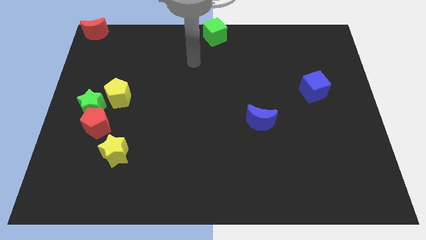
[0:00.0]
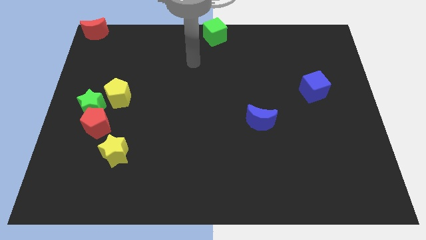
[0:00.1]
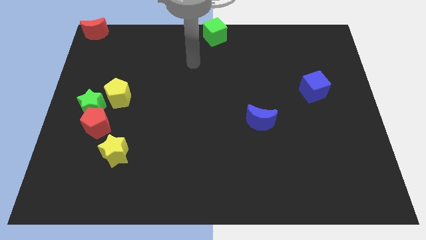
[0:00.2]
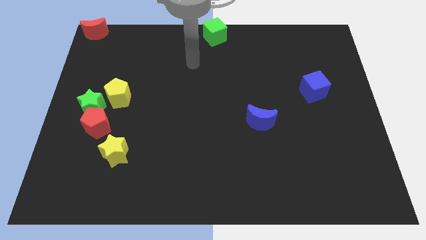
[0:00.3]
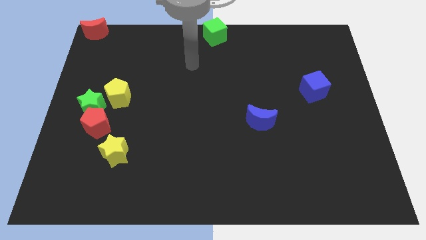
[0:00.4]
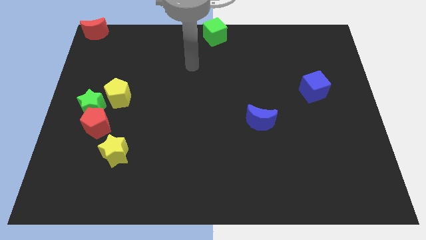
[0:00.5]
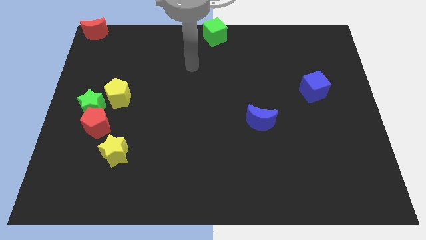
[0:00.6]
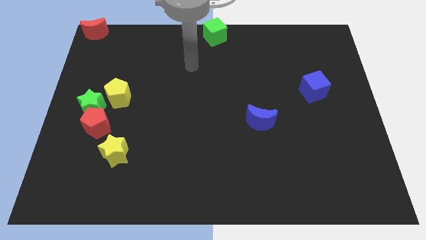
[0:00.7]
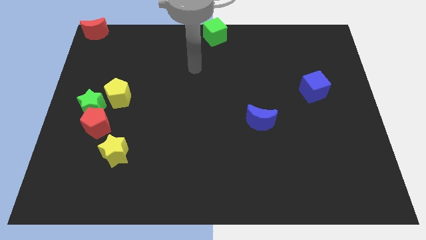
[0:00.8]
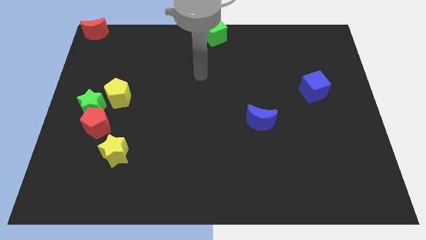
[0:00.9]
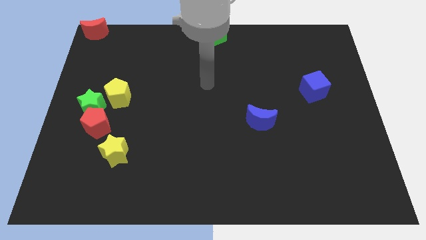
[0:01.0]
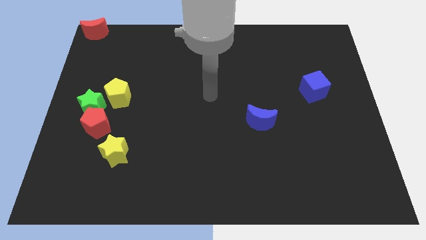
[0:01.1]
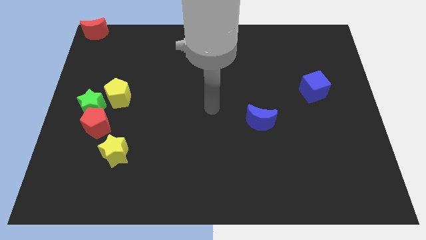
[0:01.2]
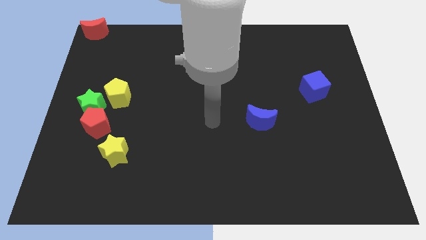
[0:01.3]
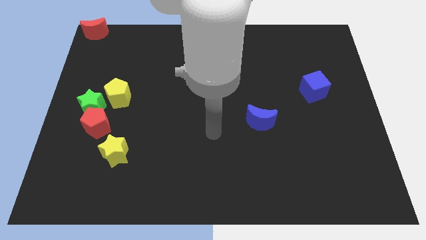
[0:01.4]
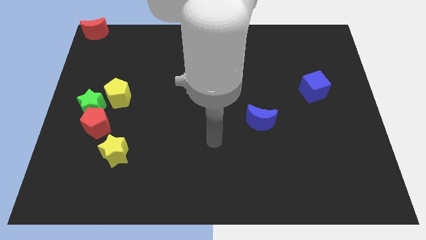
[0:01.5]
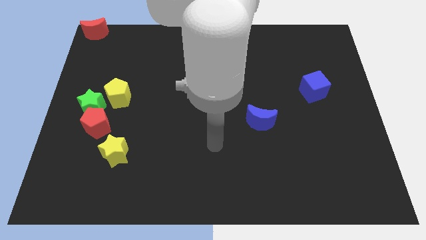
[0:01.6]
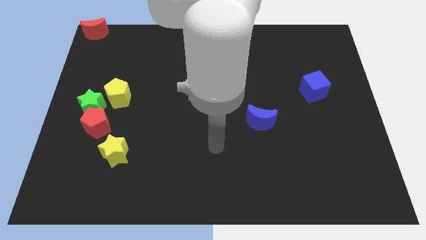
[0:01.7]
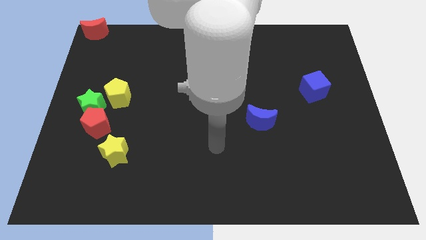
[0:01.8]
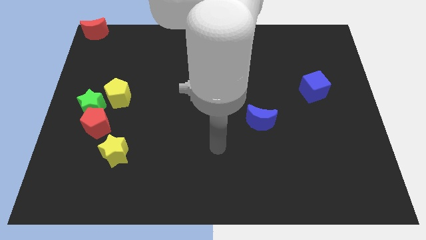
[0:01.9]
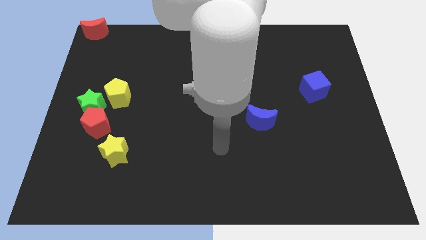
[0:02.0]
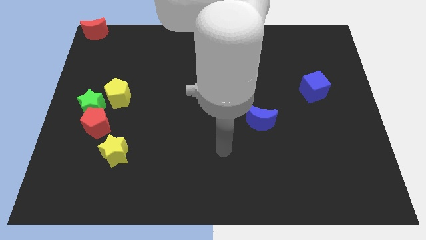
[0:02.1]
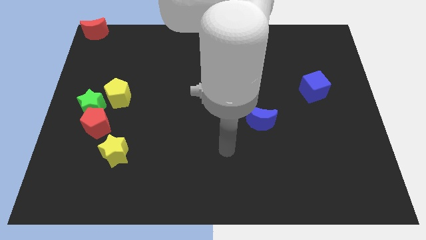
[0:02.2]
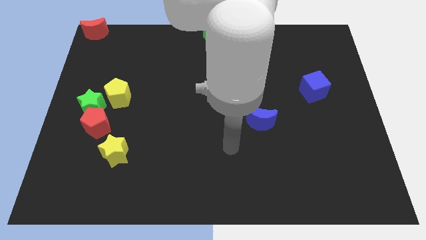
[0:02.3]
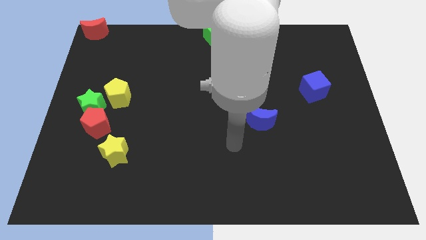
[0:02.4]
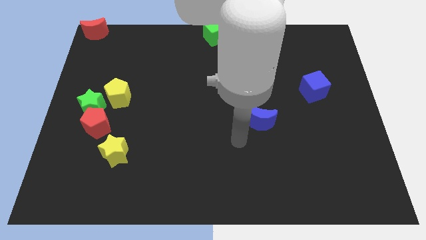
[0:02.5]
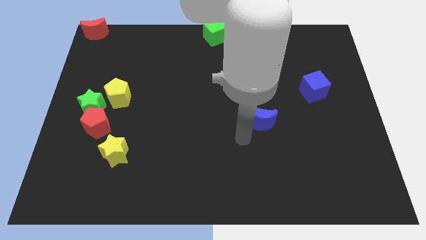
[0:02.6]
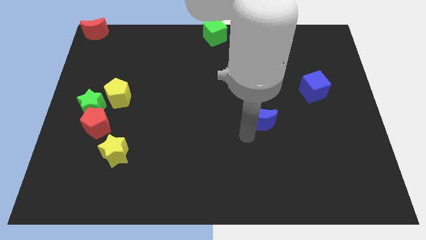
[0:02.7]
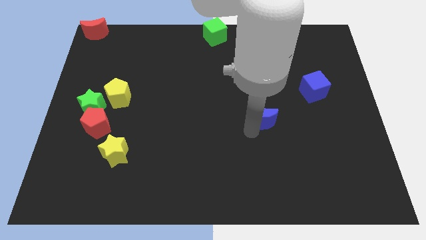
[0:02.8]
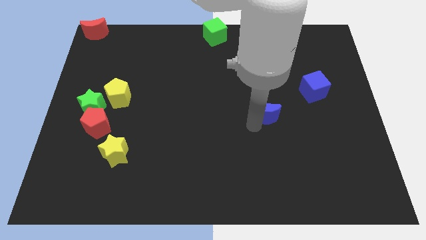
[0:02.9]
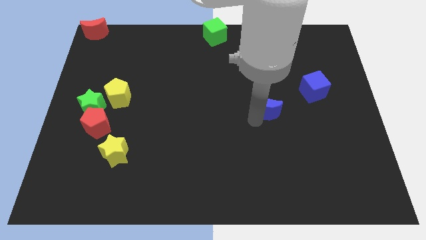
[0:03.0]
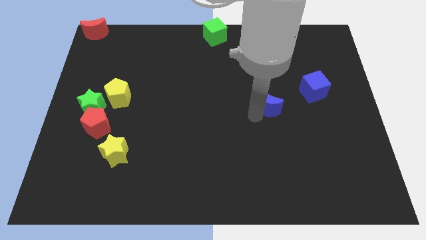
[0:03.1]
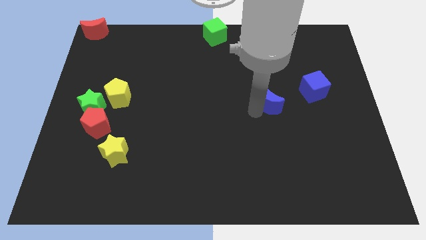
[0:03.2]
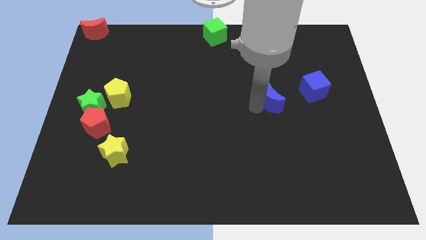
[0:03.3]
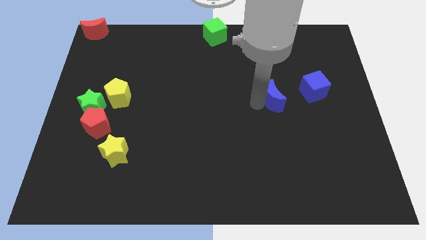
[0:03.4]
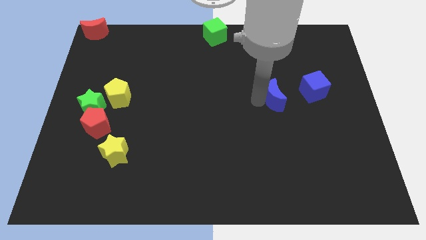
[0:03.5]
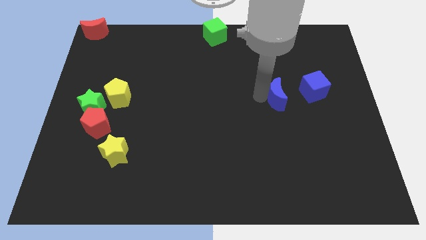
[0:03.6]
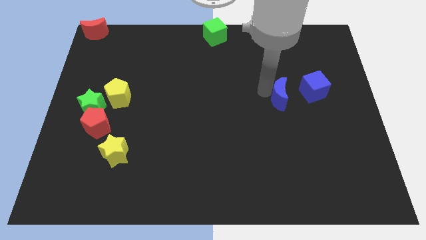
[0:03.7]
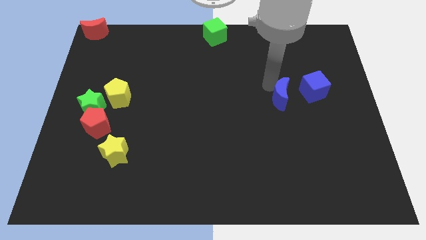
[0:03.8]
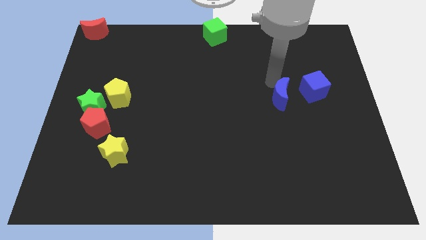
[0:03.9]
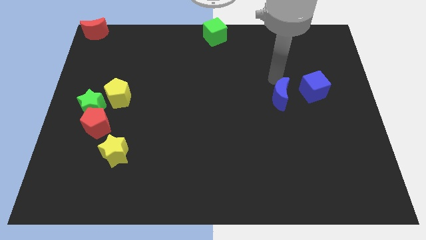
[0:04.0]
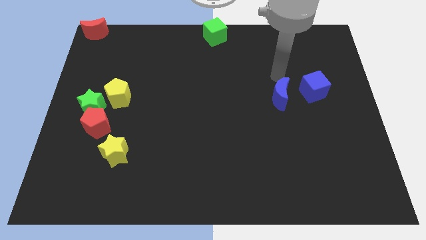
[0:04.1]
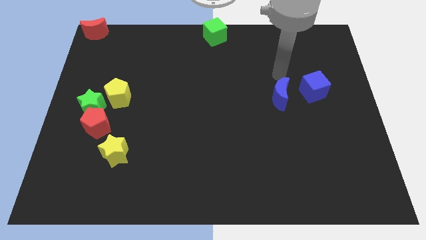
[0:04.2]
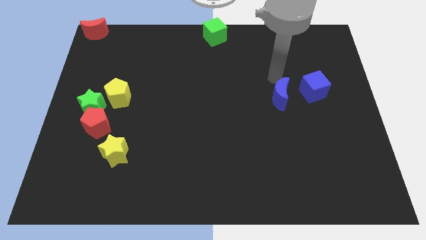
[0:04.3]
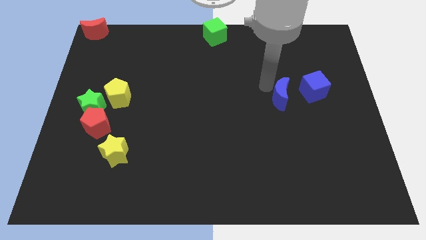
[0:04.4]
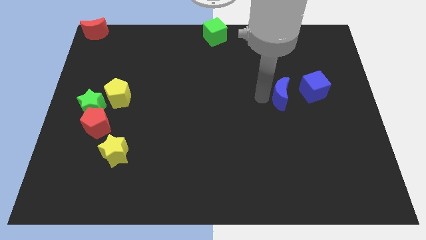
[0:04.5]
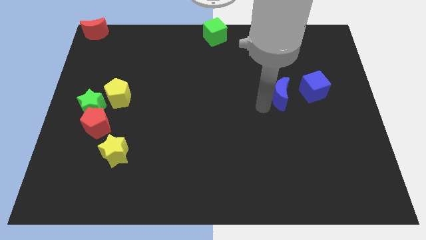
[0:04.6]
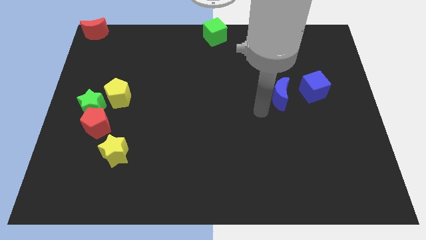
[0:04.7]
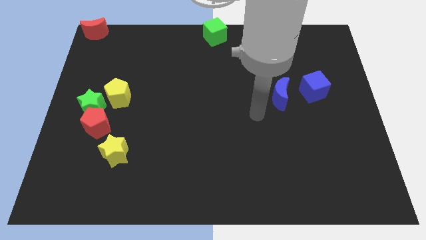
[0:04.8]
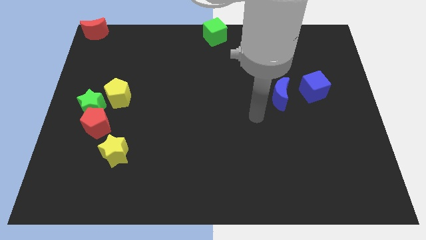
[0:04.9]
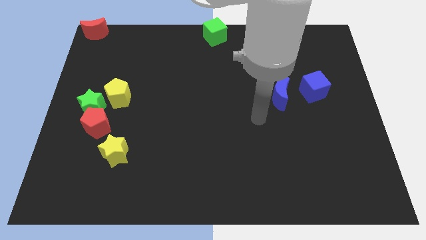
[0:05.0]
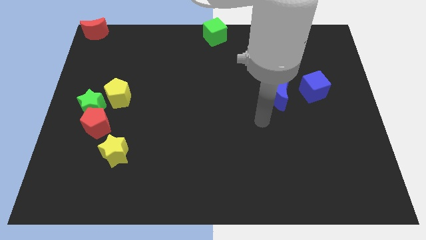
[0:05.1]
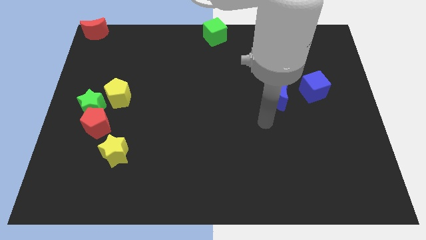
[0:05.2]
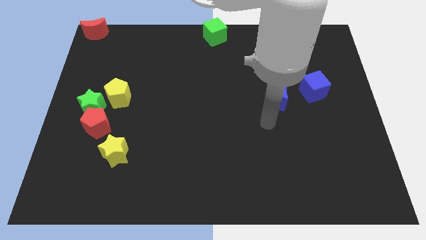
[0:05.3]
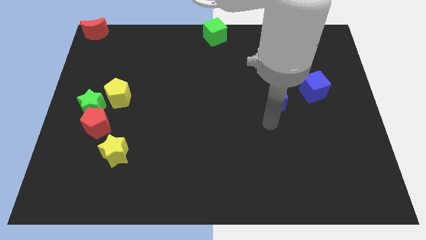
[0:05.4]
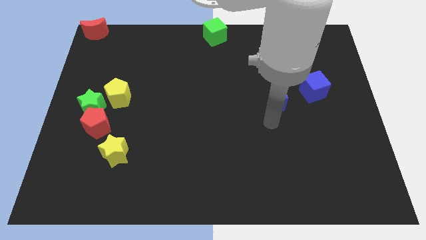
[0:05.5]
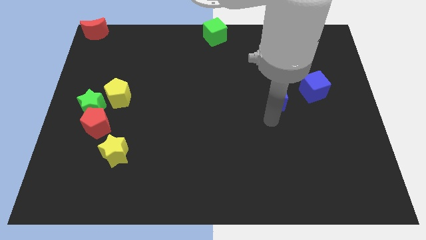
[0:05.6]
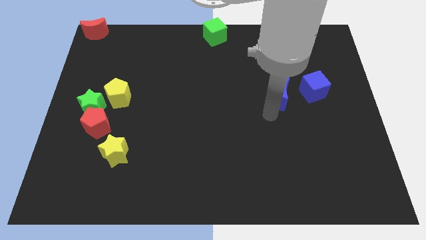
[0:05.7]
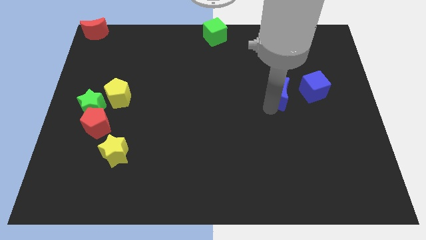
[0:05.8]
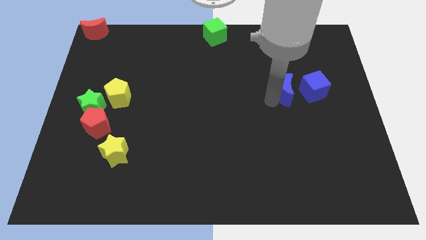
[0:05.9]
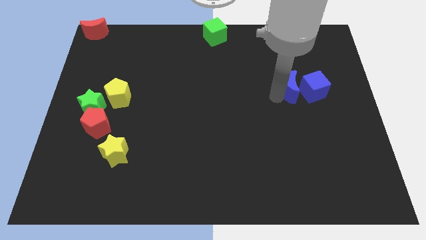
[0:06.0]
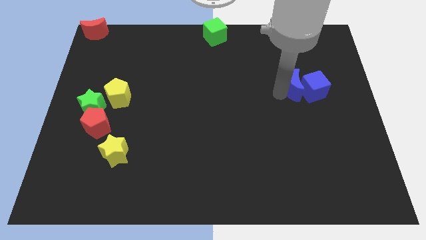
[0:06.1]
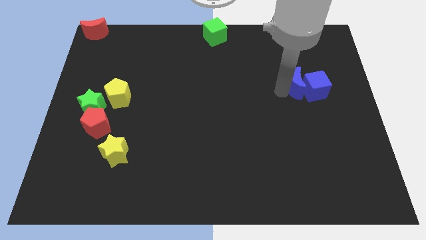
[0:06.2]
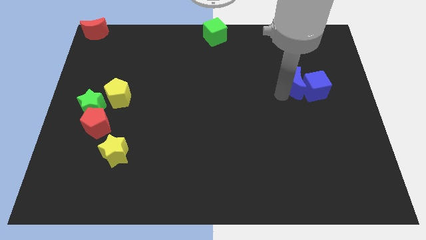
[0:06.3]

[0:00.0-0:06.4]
push the blue crescent into the blue cube

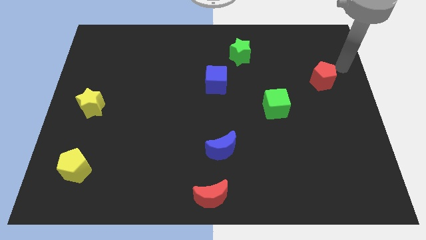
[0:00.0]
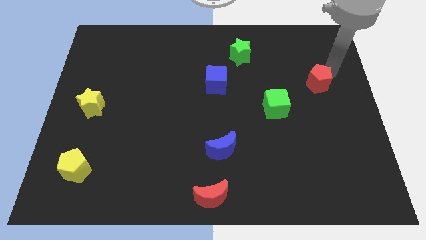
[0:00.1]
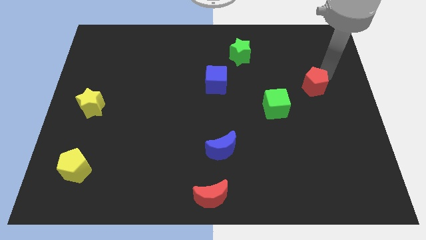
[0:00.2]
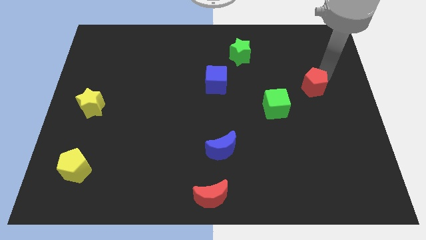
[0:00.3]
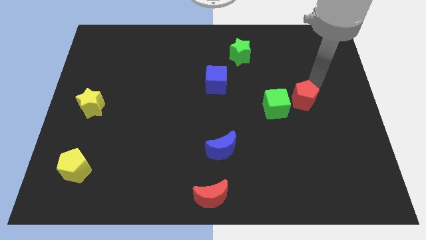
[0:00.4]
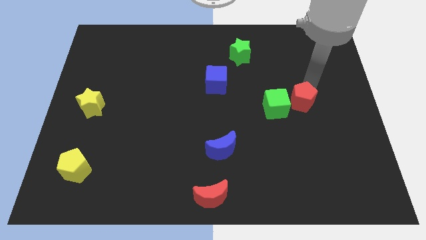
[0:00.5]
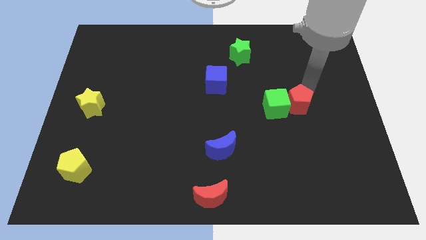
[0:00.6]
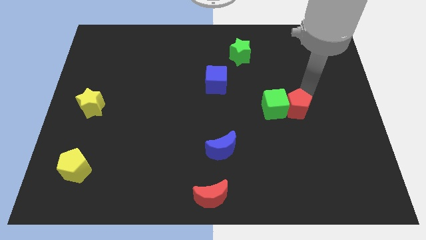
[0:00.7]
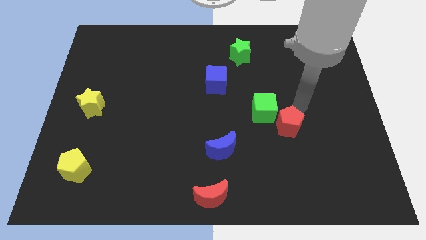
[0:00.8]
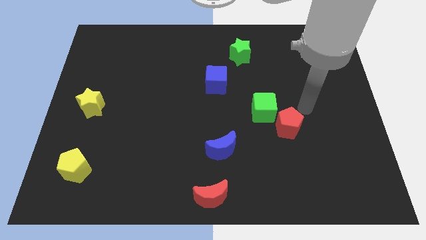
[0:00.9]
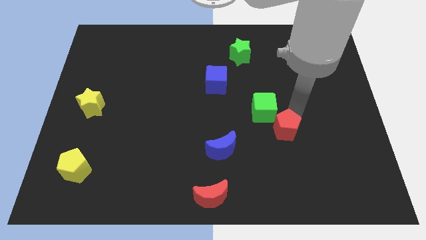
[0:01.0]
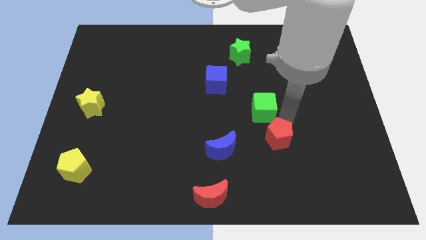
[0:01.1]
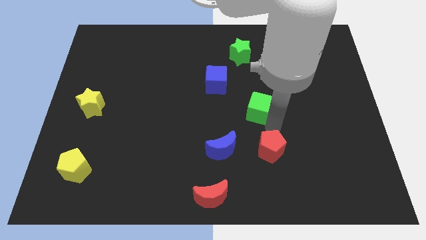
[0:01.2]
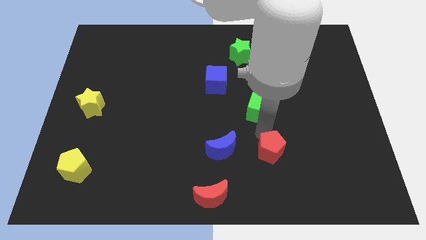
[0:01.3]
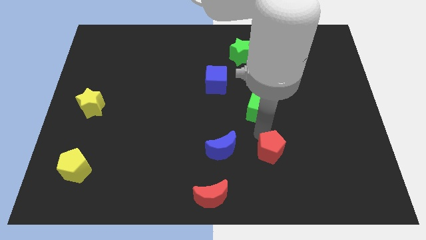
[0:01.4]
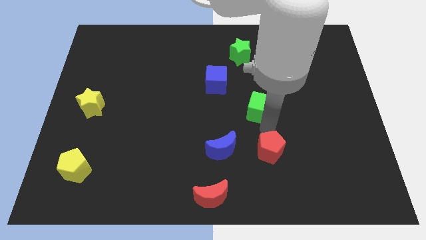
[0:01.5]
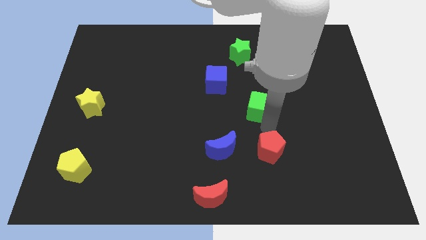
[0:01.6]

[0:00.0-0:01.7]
move the red pentagon towards the right of the blue crescent

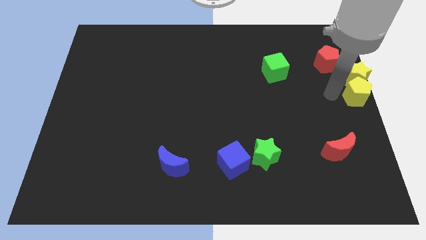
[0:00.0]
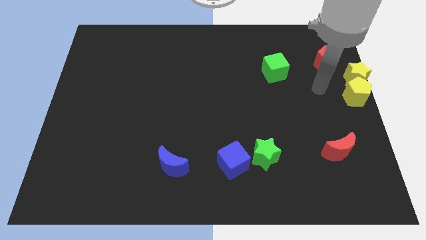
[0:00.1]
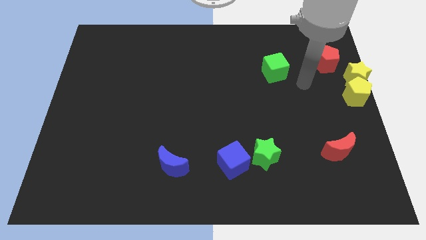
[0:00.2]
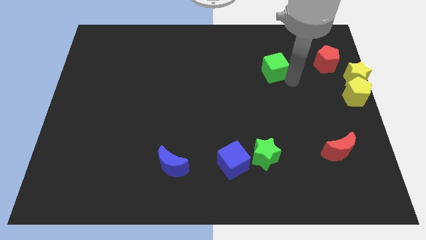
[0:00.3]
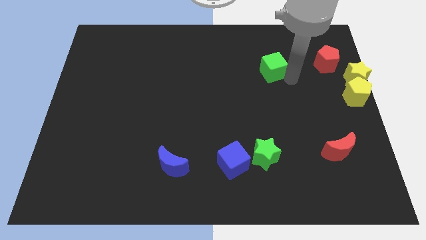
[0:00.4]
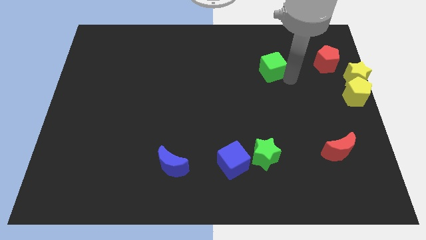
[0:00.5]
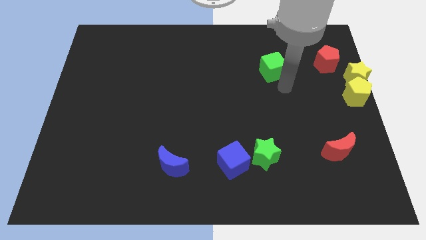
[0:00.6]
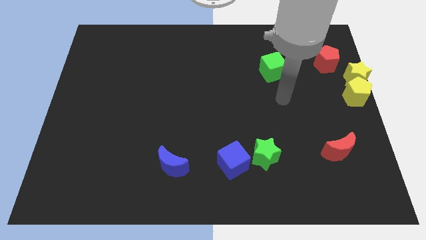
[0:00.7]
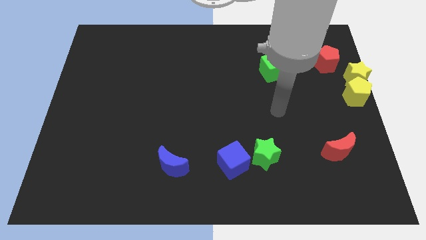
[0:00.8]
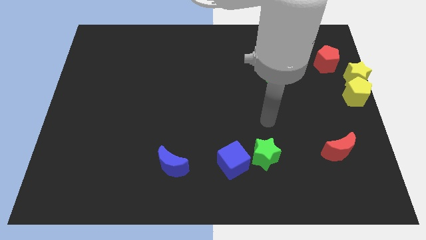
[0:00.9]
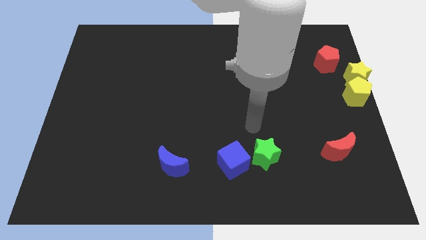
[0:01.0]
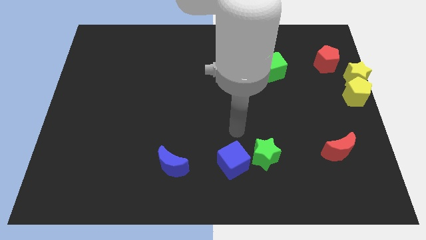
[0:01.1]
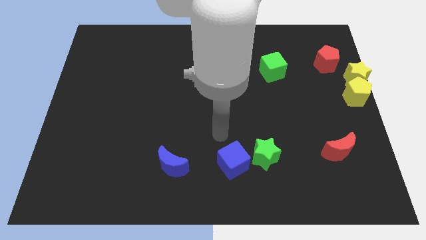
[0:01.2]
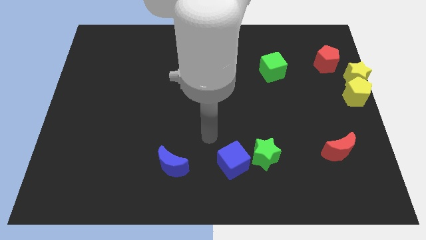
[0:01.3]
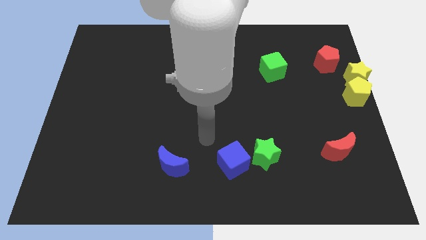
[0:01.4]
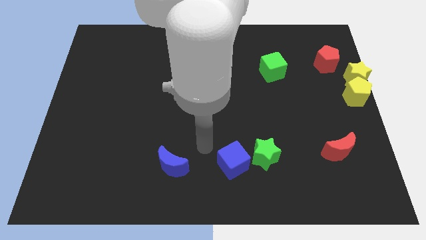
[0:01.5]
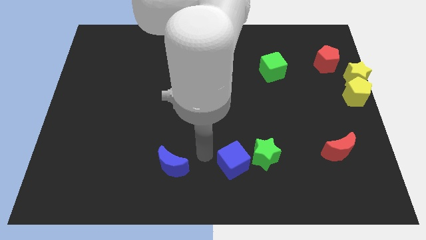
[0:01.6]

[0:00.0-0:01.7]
touch the green cube to the right
